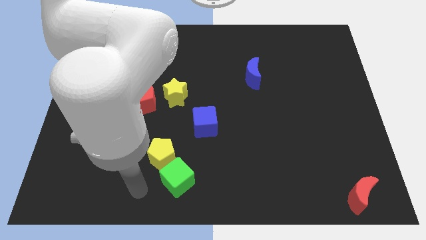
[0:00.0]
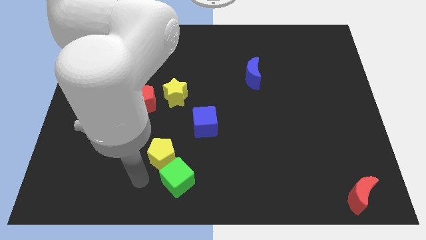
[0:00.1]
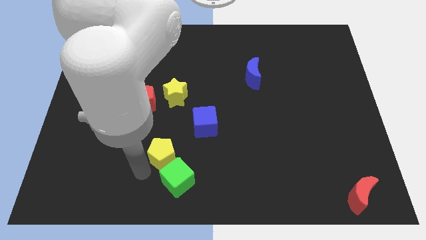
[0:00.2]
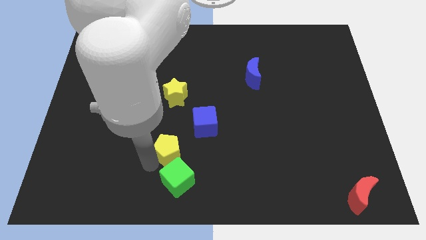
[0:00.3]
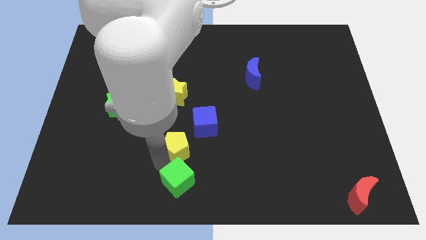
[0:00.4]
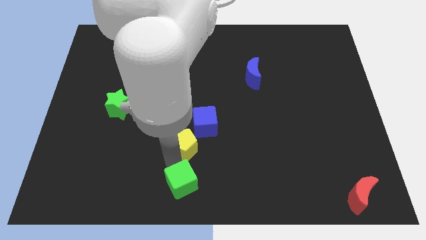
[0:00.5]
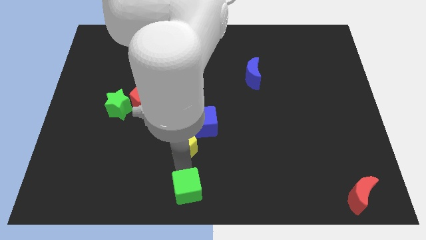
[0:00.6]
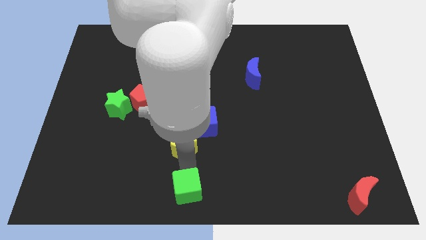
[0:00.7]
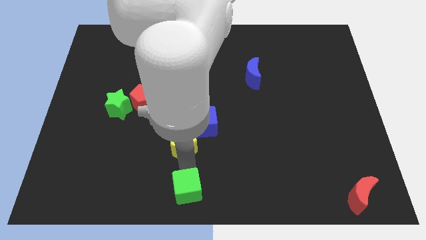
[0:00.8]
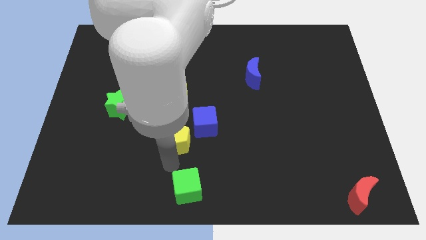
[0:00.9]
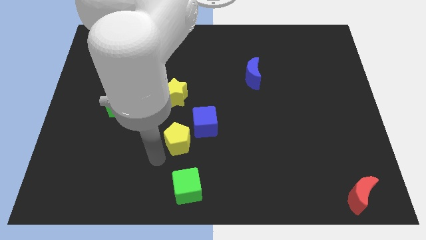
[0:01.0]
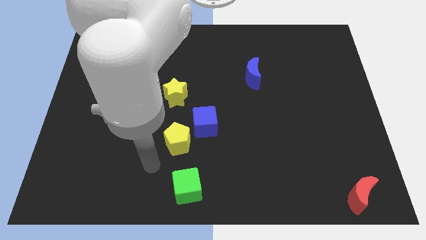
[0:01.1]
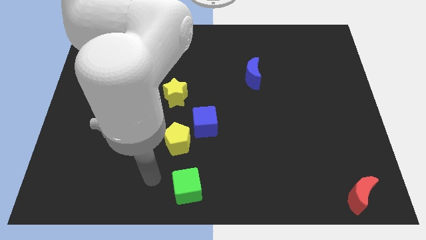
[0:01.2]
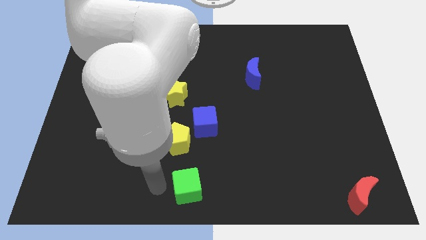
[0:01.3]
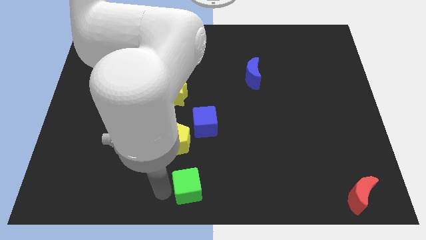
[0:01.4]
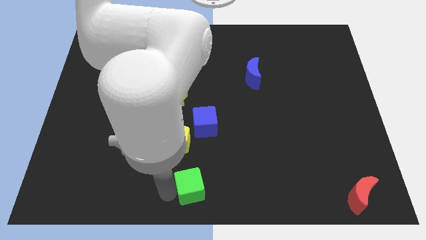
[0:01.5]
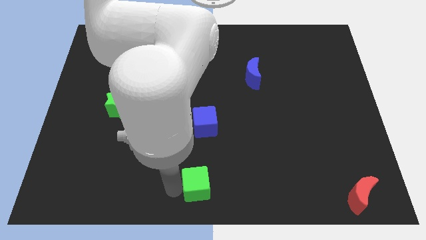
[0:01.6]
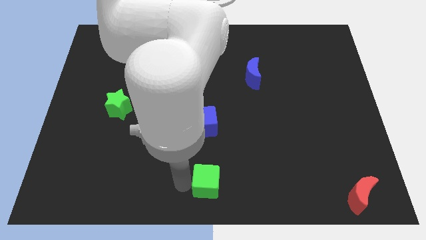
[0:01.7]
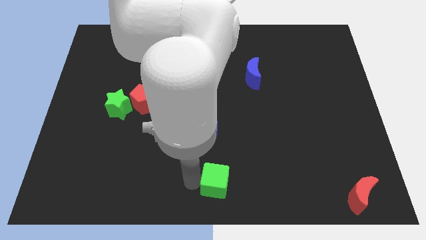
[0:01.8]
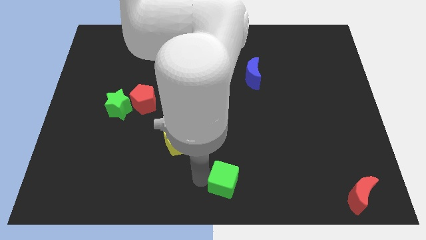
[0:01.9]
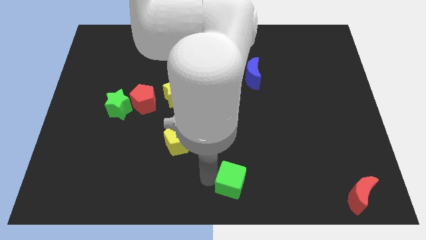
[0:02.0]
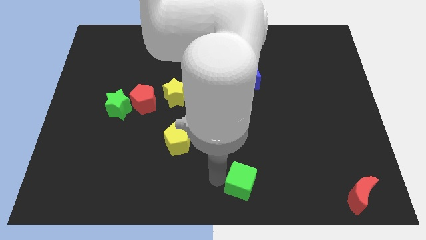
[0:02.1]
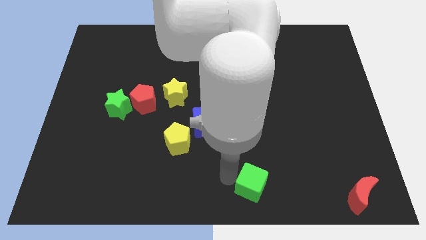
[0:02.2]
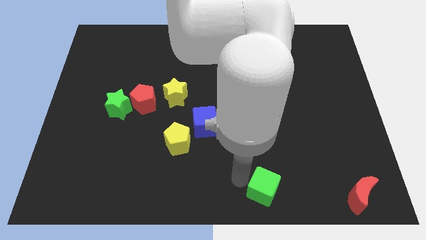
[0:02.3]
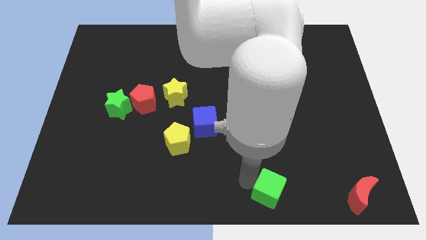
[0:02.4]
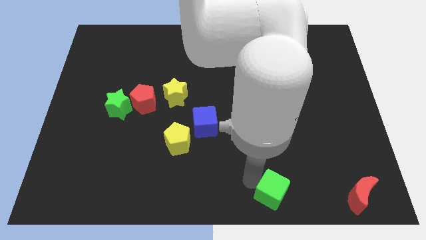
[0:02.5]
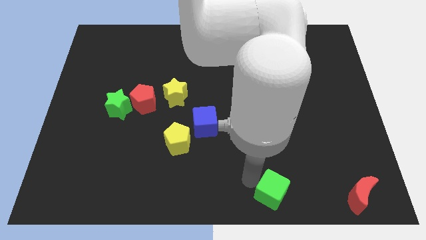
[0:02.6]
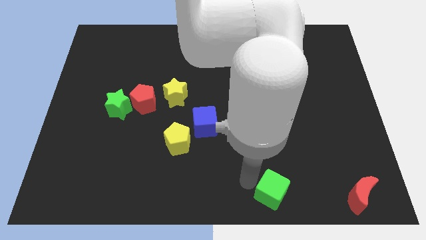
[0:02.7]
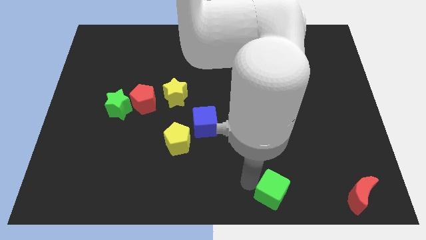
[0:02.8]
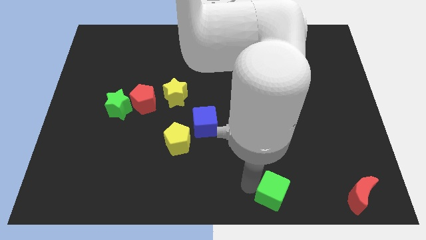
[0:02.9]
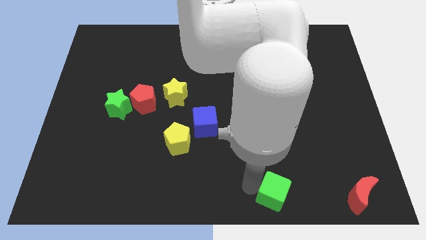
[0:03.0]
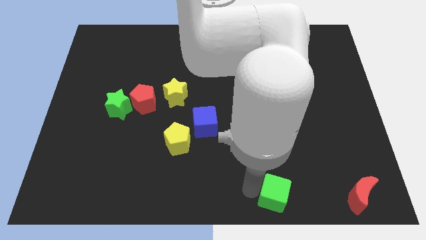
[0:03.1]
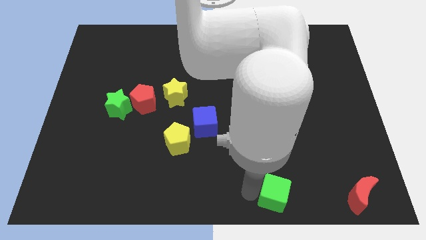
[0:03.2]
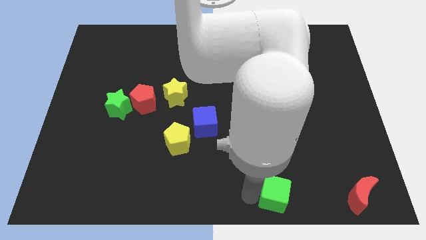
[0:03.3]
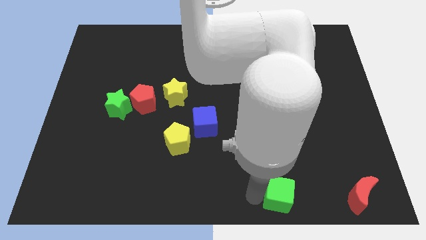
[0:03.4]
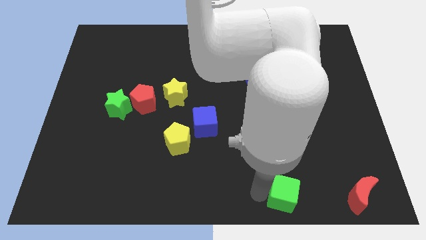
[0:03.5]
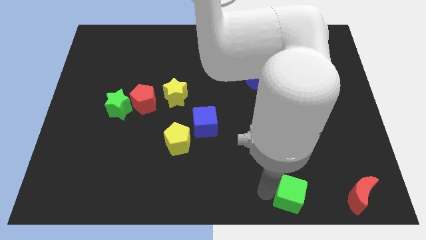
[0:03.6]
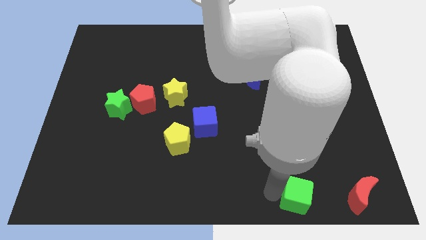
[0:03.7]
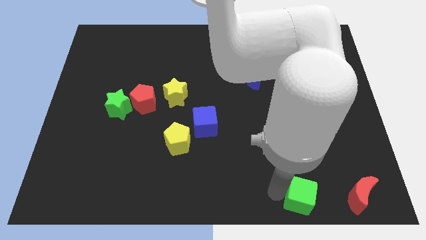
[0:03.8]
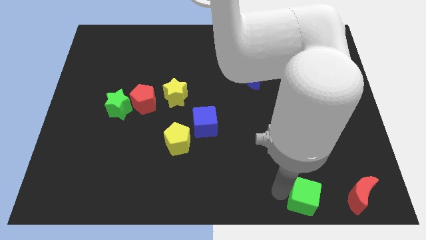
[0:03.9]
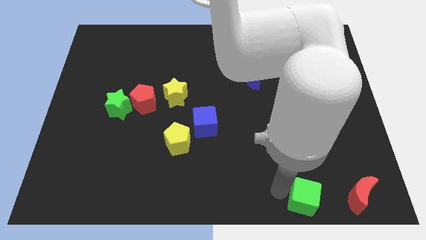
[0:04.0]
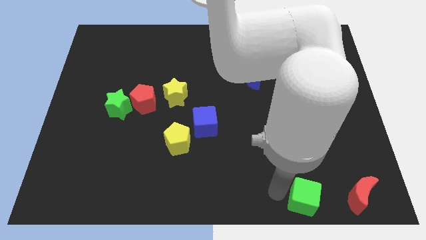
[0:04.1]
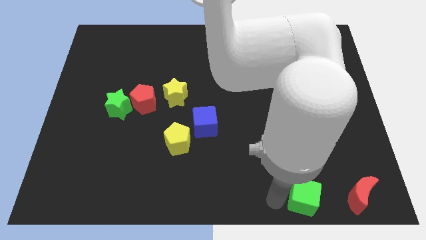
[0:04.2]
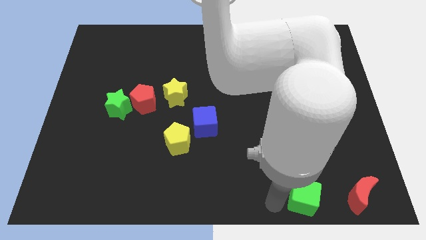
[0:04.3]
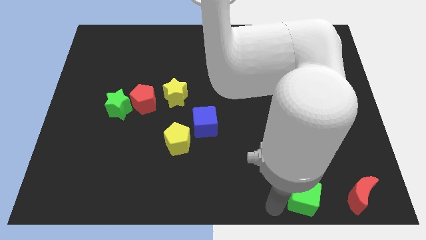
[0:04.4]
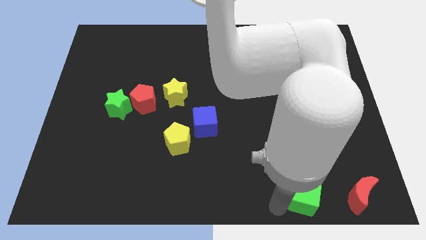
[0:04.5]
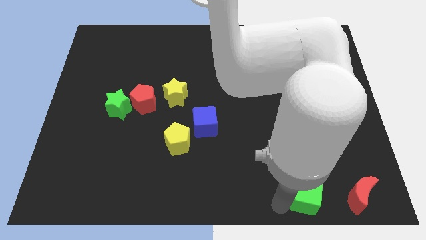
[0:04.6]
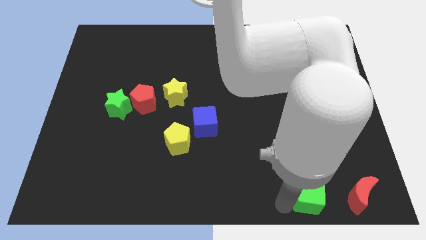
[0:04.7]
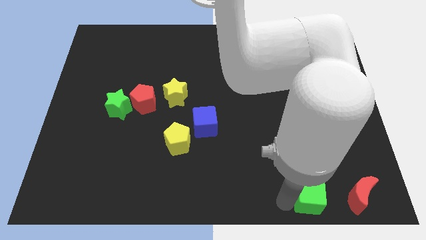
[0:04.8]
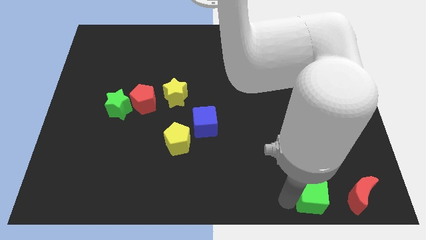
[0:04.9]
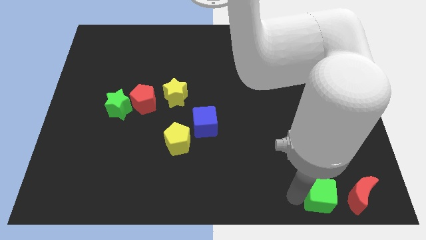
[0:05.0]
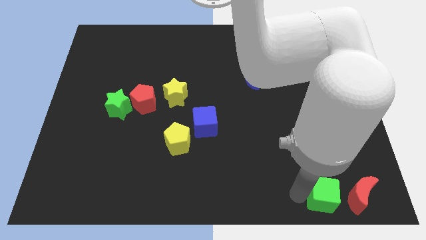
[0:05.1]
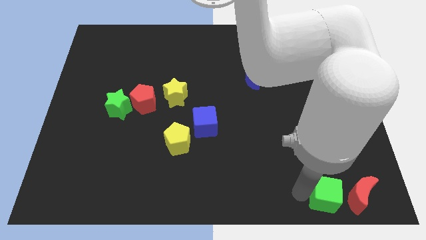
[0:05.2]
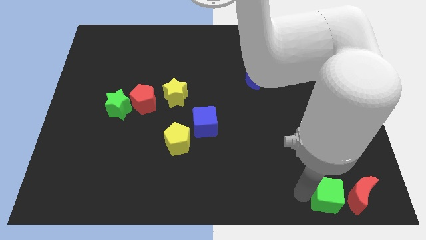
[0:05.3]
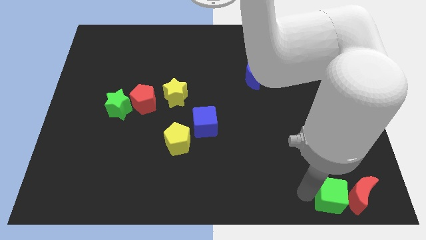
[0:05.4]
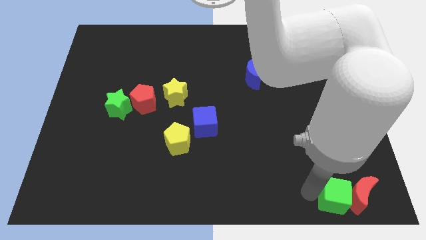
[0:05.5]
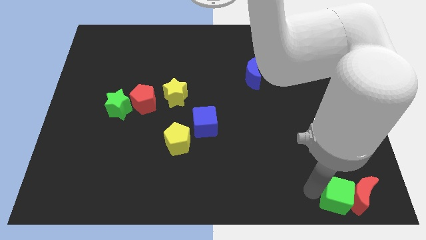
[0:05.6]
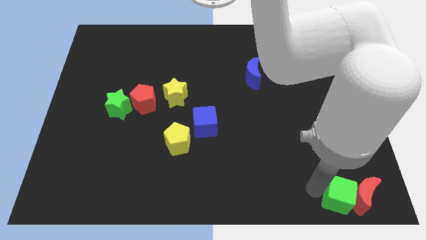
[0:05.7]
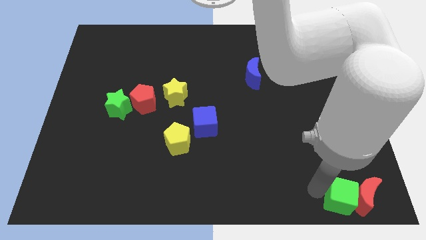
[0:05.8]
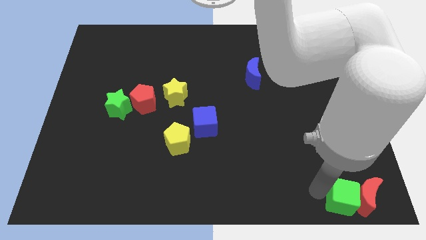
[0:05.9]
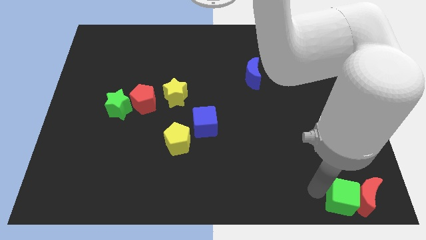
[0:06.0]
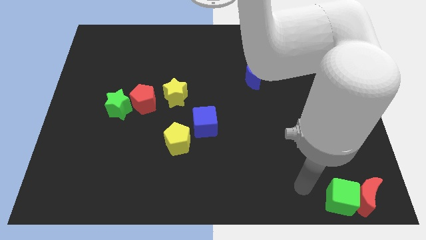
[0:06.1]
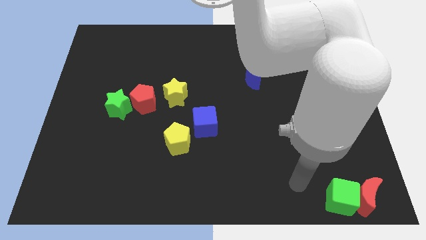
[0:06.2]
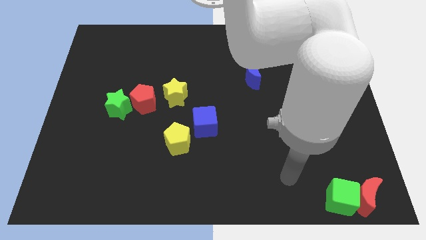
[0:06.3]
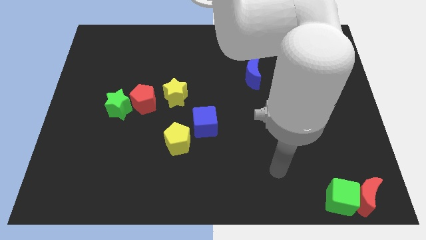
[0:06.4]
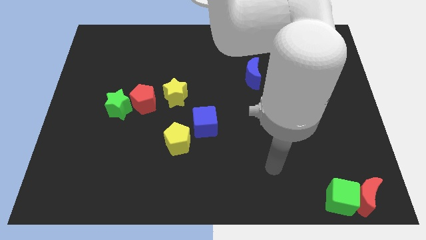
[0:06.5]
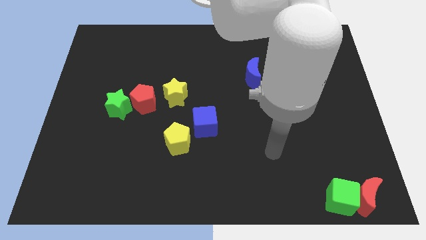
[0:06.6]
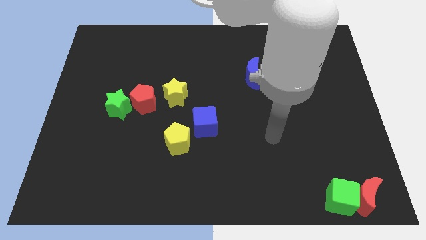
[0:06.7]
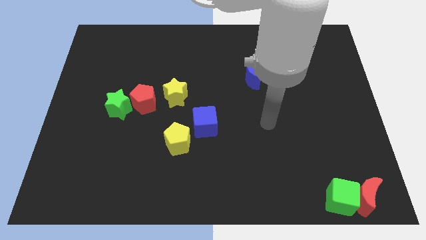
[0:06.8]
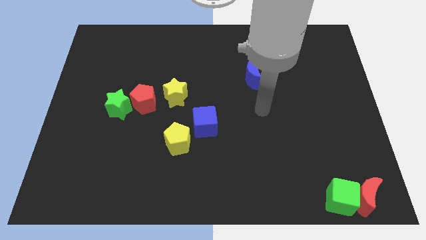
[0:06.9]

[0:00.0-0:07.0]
move green cube left beside the red moon

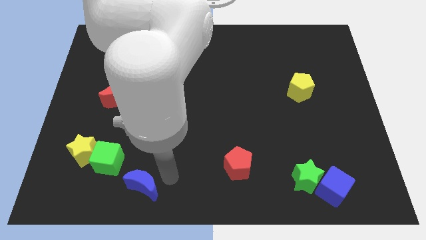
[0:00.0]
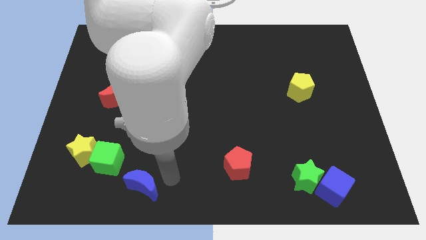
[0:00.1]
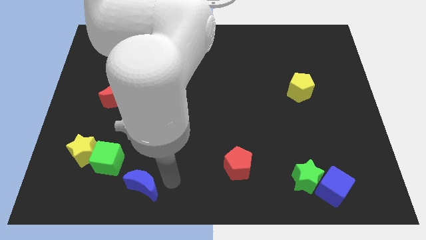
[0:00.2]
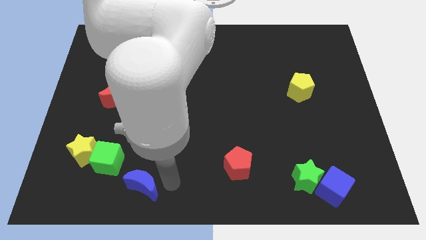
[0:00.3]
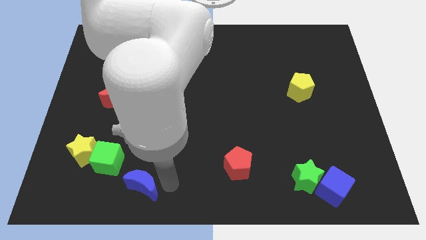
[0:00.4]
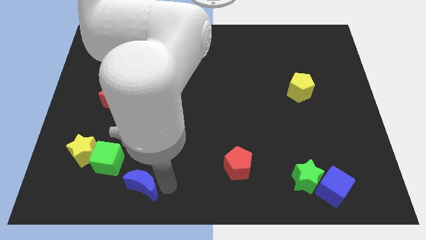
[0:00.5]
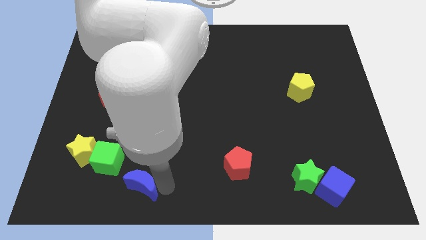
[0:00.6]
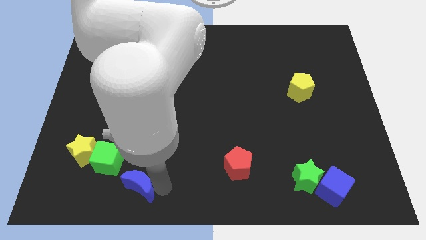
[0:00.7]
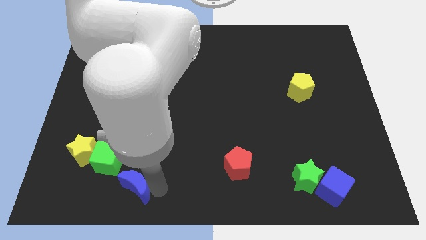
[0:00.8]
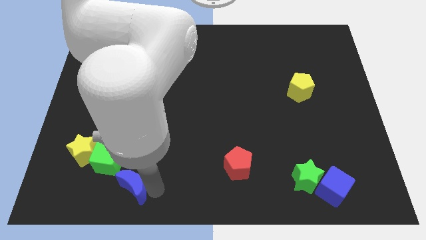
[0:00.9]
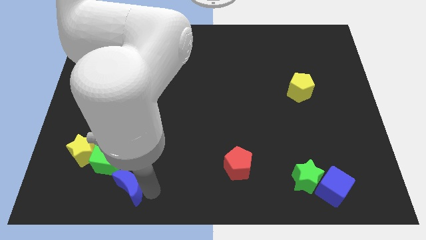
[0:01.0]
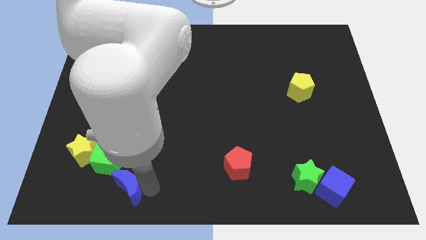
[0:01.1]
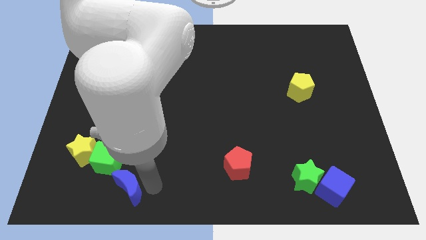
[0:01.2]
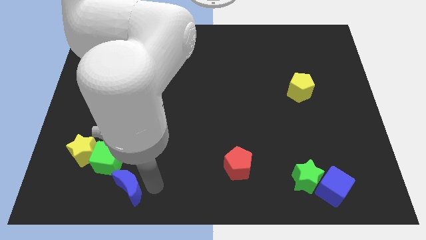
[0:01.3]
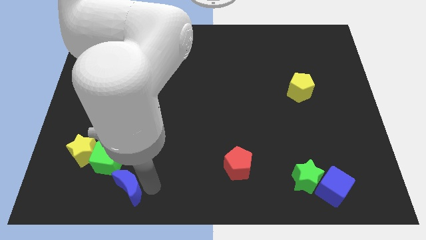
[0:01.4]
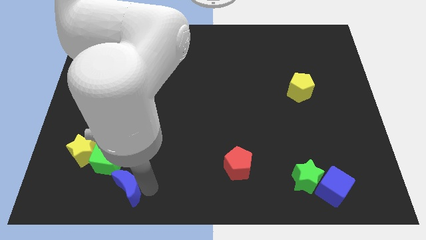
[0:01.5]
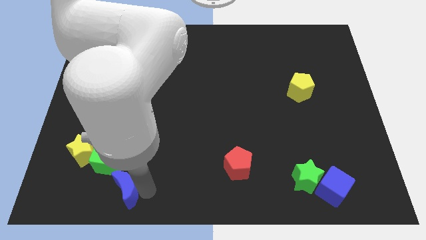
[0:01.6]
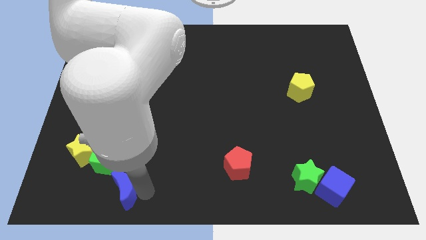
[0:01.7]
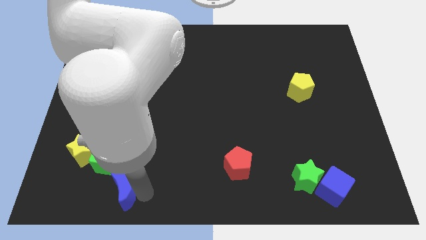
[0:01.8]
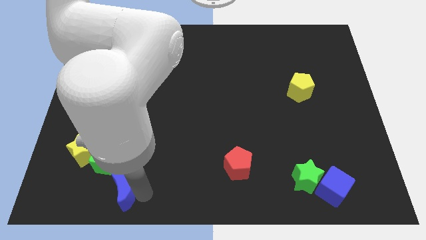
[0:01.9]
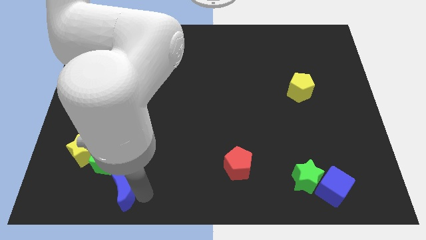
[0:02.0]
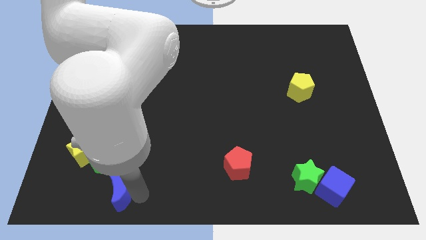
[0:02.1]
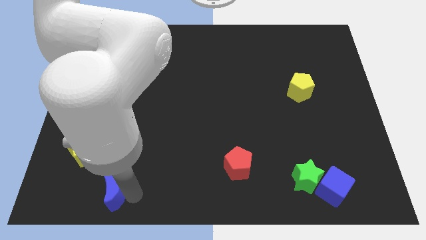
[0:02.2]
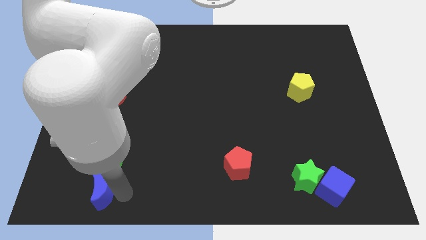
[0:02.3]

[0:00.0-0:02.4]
place the blue crescent at the bottom of green cube
